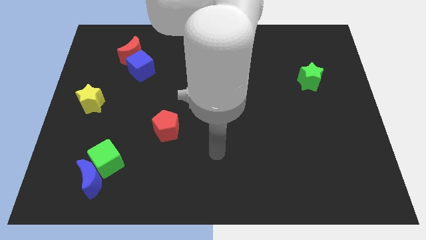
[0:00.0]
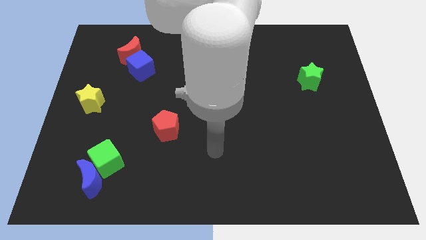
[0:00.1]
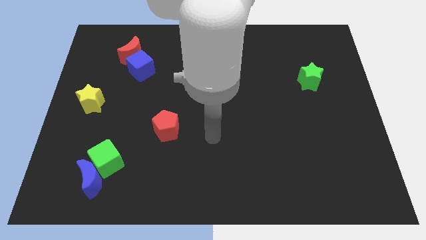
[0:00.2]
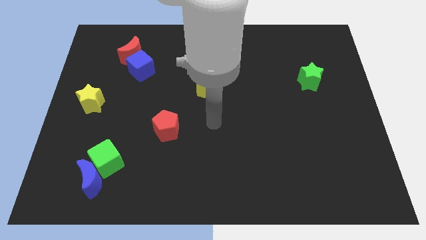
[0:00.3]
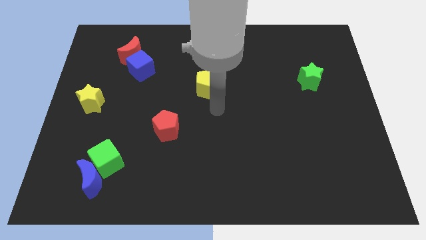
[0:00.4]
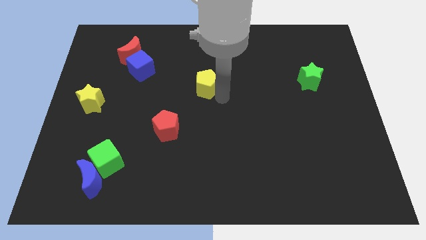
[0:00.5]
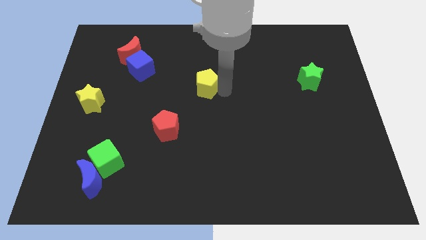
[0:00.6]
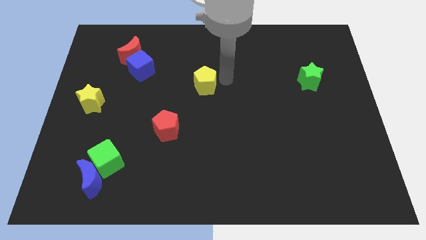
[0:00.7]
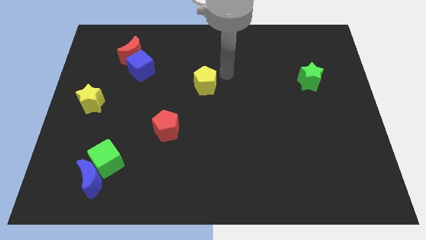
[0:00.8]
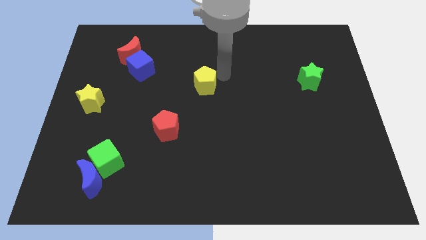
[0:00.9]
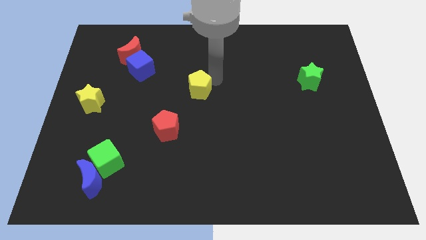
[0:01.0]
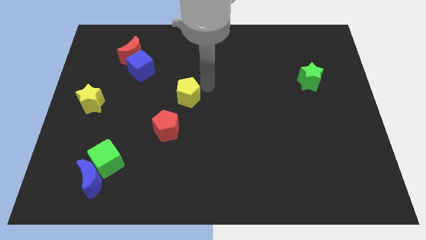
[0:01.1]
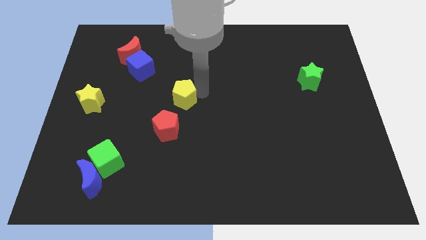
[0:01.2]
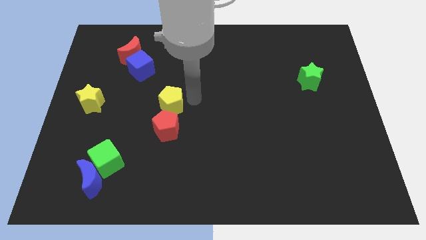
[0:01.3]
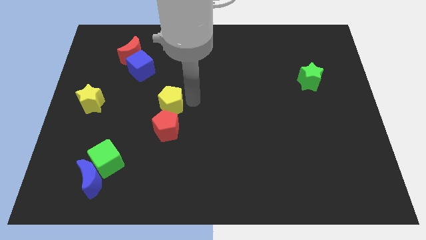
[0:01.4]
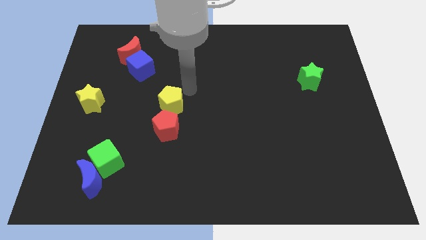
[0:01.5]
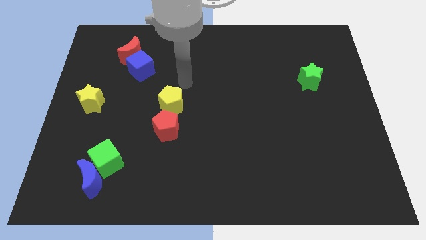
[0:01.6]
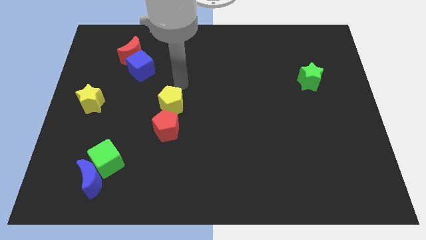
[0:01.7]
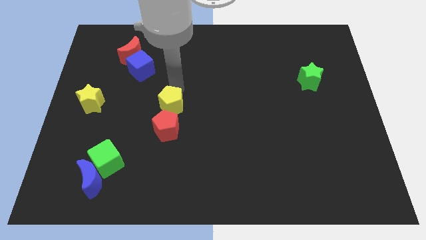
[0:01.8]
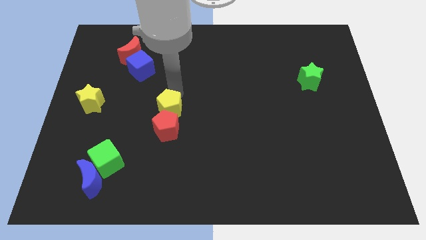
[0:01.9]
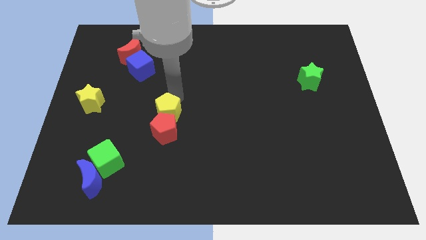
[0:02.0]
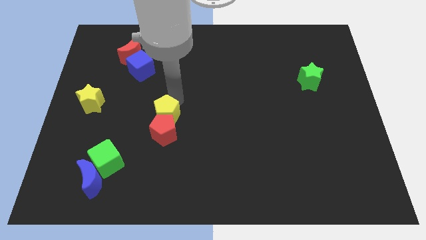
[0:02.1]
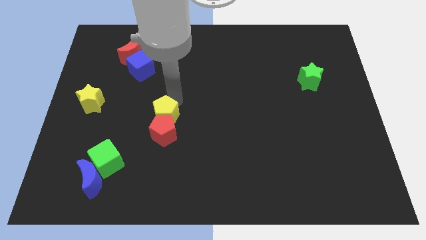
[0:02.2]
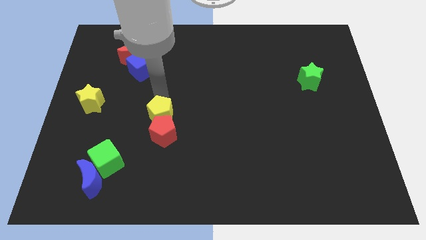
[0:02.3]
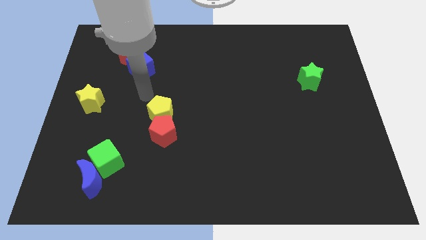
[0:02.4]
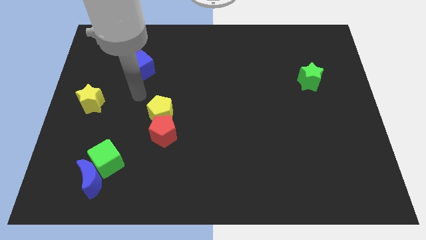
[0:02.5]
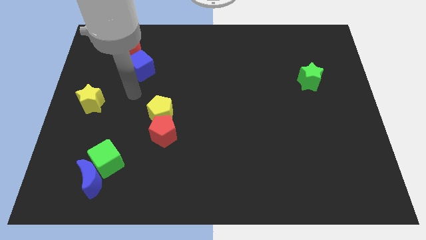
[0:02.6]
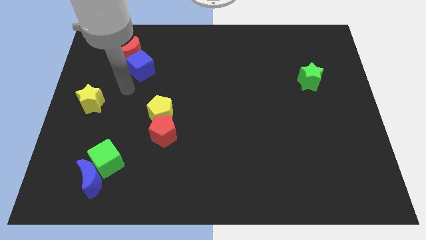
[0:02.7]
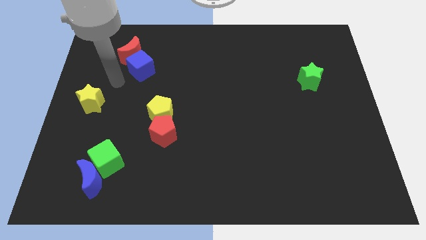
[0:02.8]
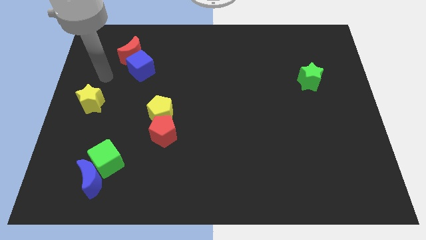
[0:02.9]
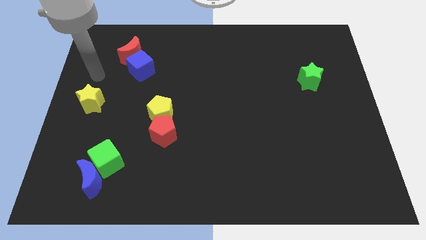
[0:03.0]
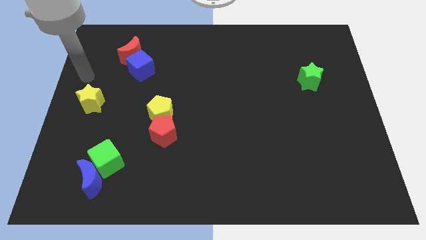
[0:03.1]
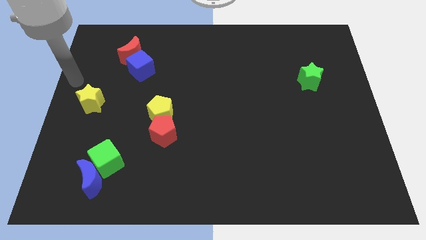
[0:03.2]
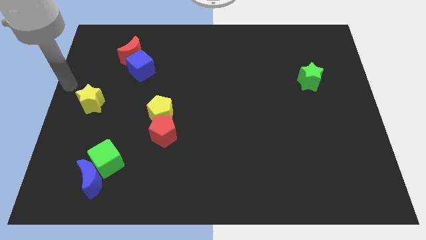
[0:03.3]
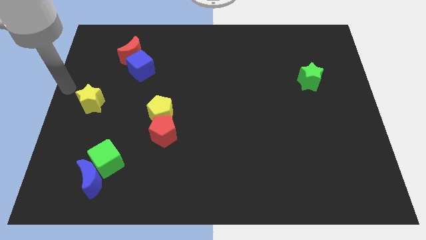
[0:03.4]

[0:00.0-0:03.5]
push the yellow pentagon over the red object

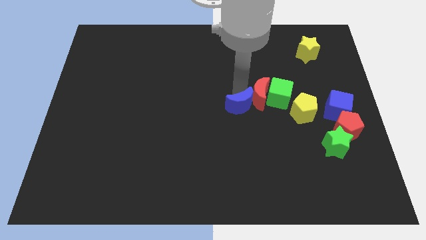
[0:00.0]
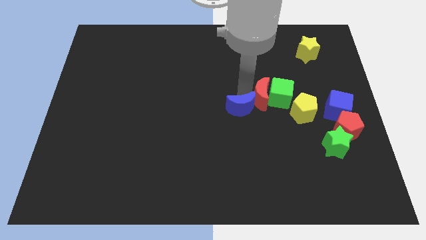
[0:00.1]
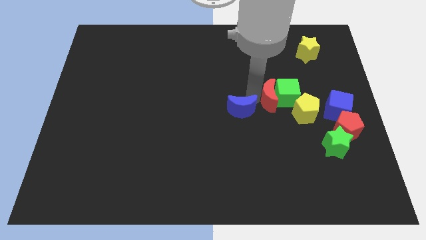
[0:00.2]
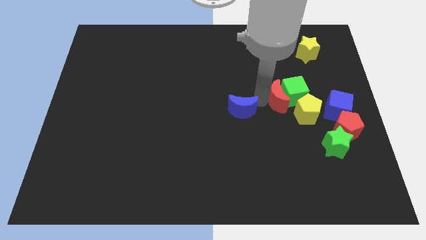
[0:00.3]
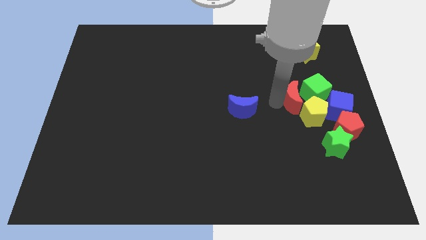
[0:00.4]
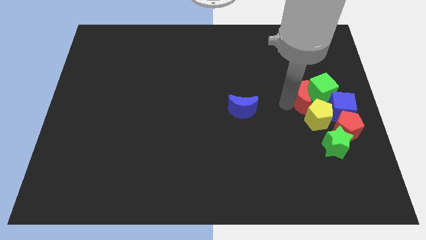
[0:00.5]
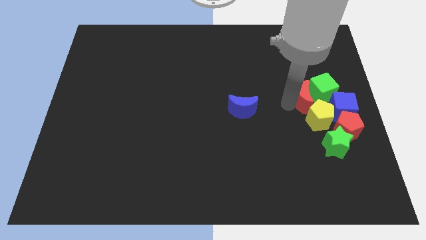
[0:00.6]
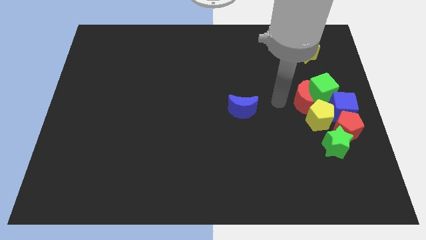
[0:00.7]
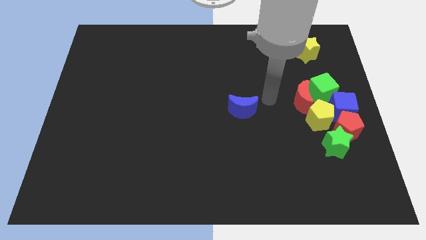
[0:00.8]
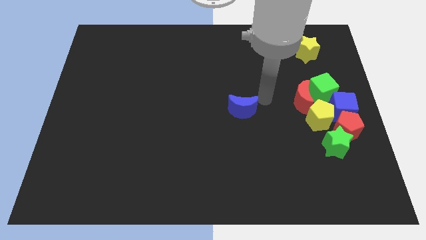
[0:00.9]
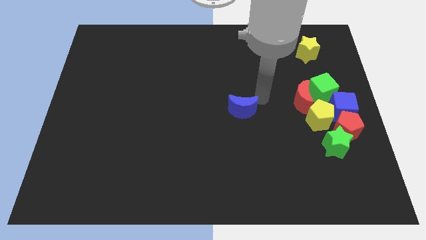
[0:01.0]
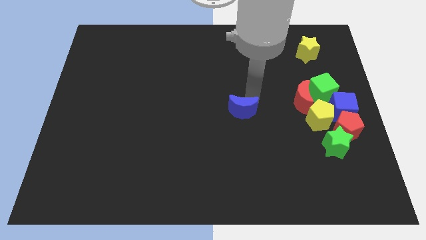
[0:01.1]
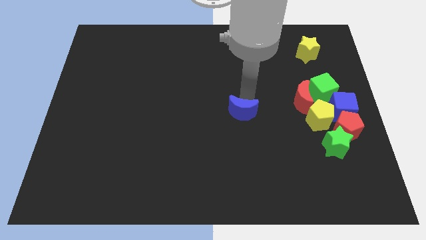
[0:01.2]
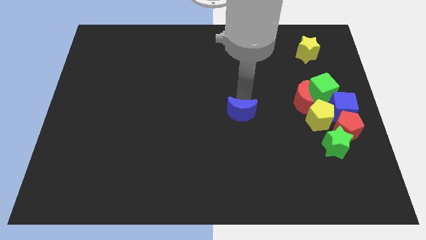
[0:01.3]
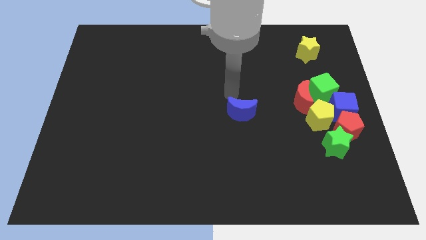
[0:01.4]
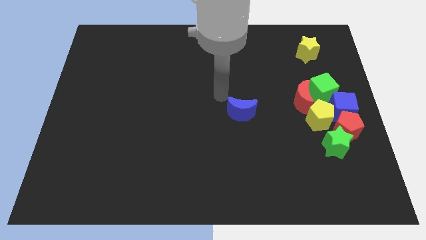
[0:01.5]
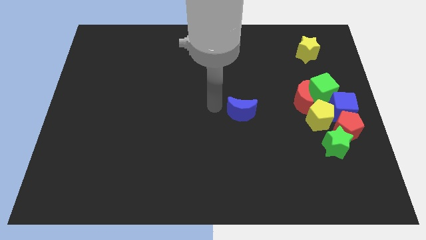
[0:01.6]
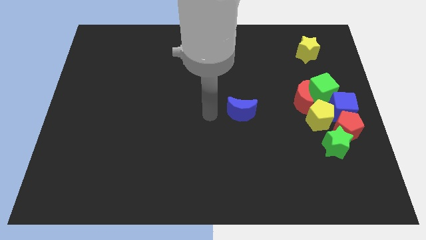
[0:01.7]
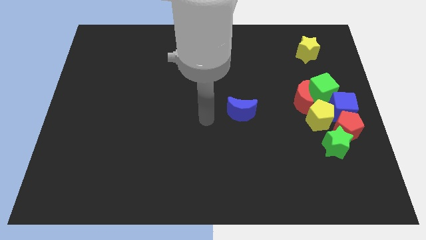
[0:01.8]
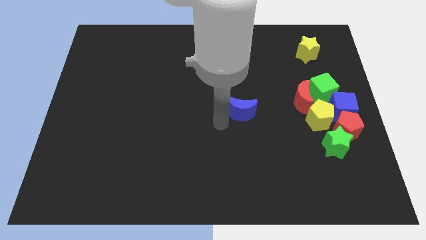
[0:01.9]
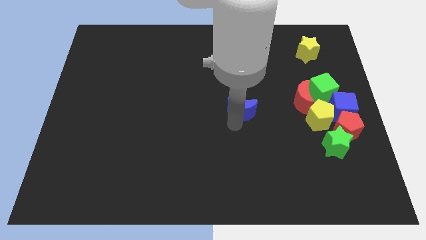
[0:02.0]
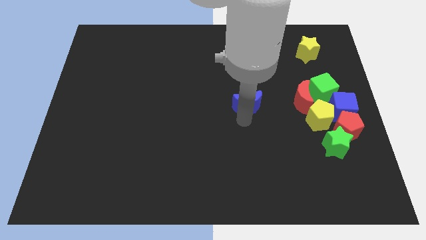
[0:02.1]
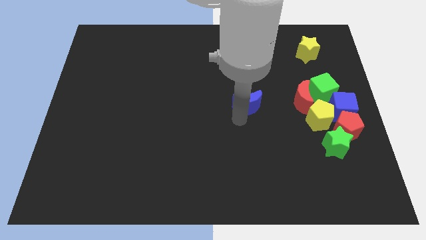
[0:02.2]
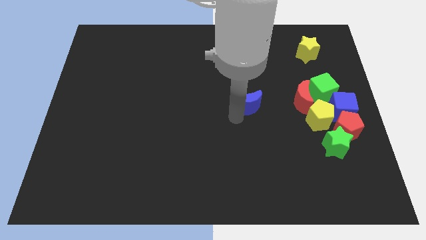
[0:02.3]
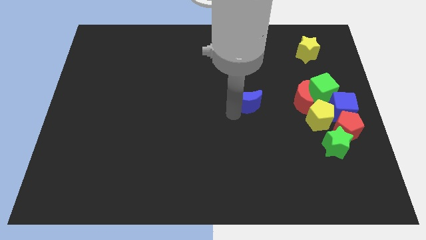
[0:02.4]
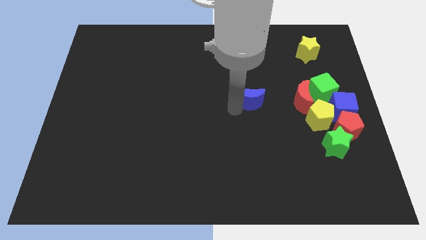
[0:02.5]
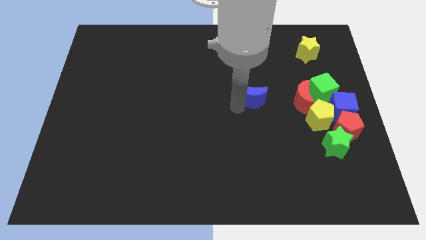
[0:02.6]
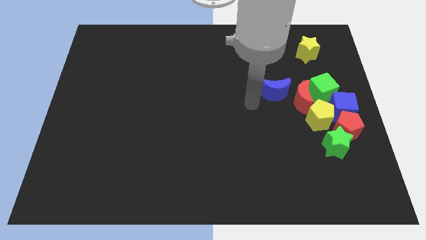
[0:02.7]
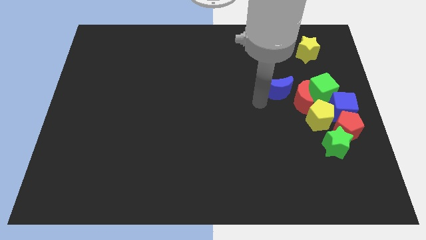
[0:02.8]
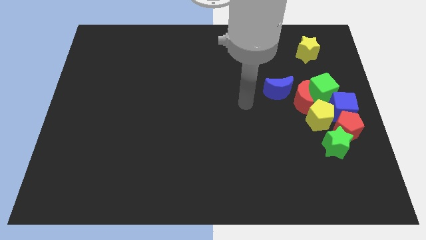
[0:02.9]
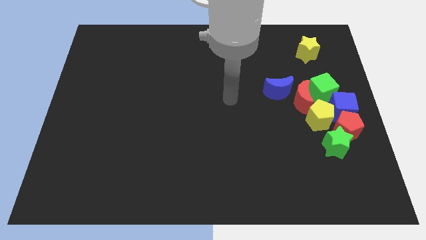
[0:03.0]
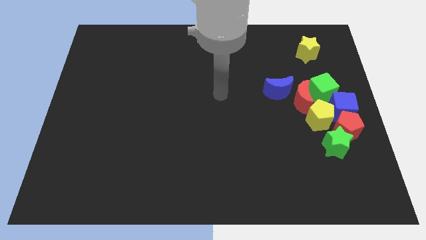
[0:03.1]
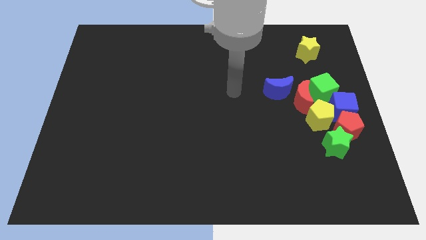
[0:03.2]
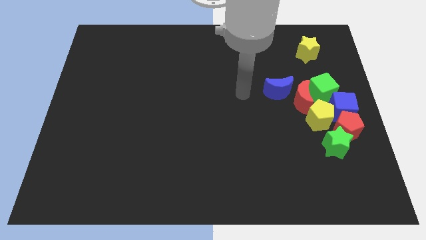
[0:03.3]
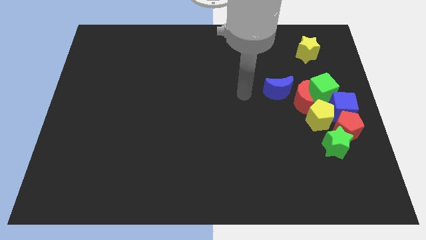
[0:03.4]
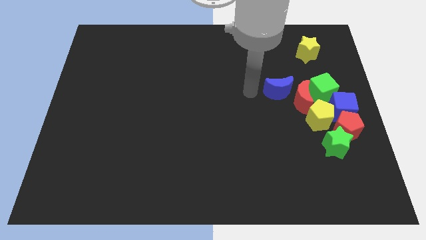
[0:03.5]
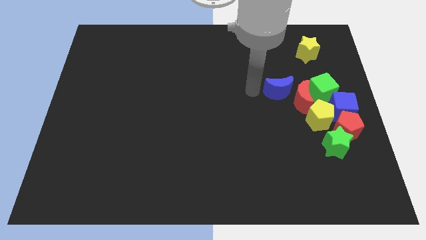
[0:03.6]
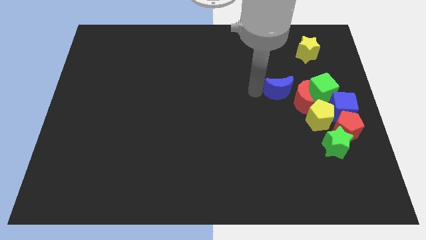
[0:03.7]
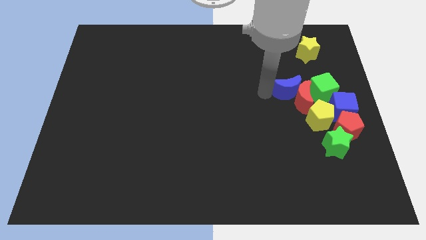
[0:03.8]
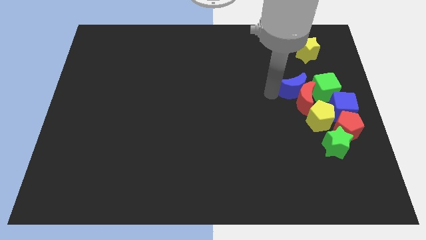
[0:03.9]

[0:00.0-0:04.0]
push the group of blocks towards the right side of the board

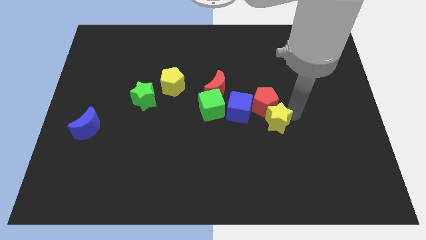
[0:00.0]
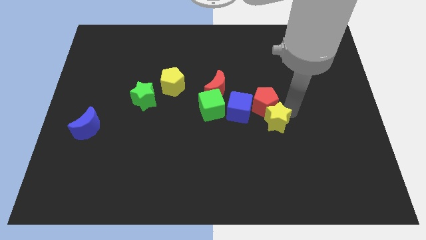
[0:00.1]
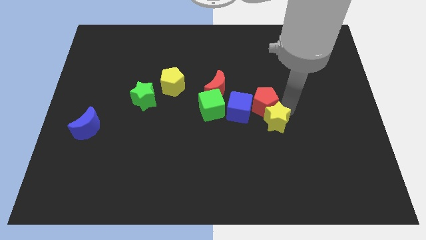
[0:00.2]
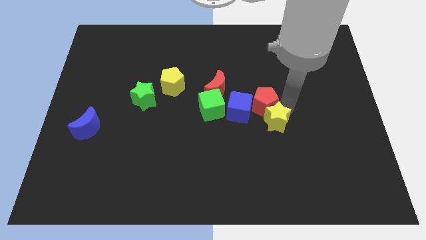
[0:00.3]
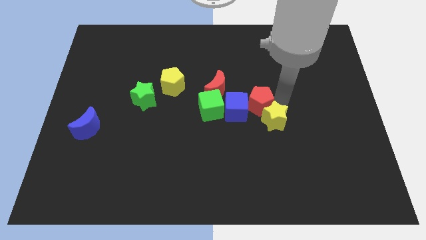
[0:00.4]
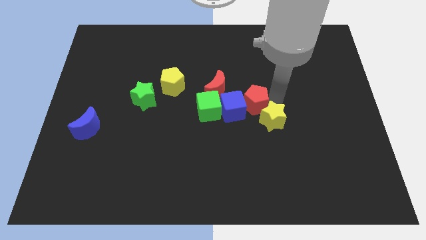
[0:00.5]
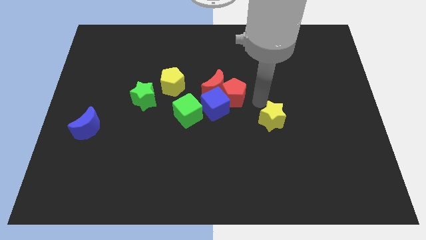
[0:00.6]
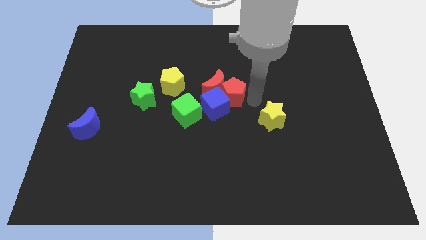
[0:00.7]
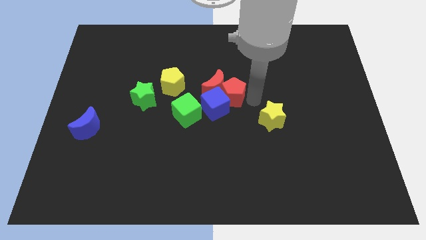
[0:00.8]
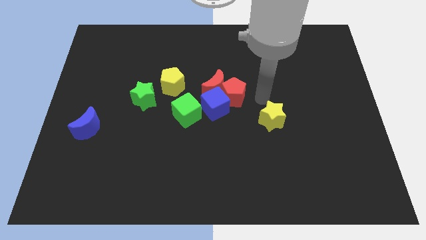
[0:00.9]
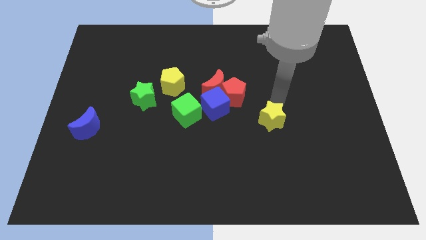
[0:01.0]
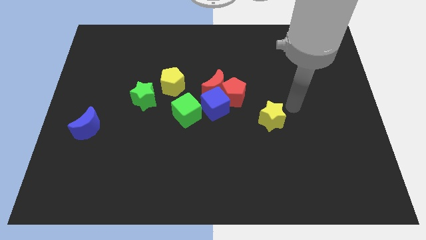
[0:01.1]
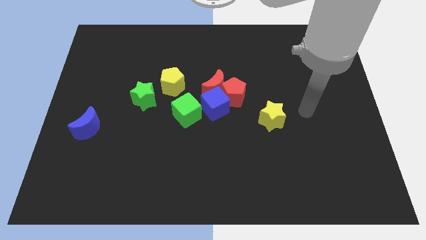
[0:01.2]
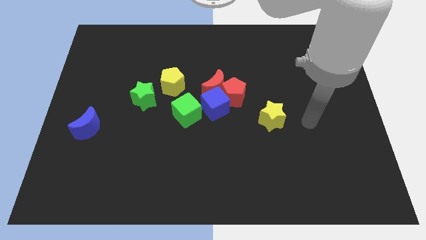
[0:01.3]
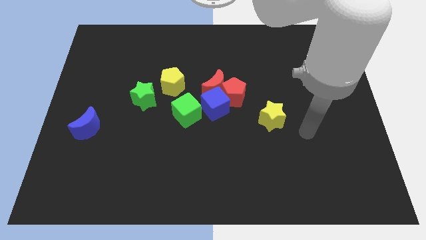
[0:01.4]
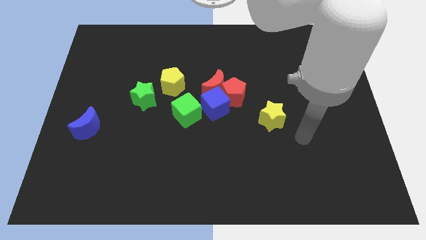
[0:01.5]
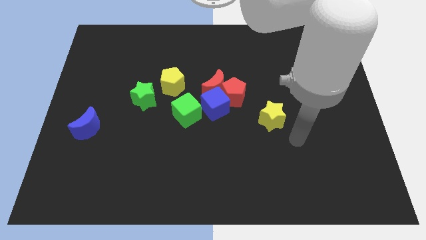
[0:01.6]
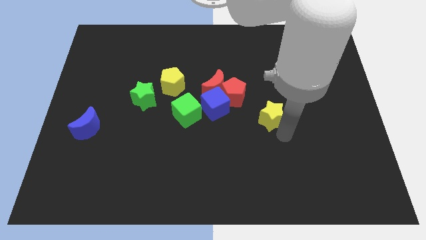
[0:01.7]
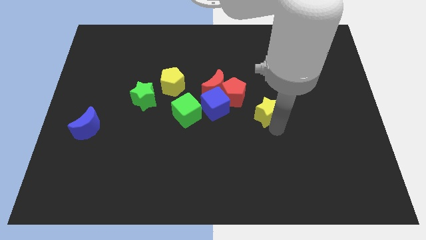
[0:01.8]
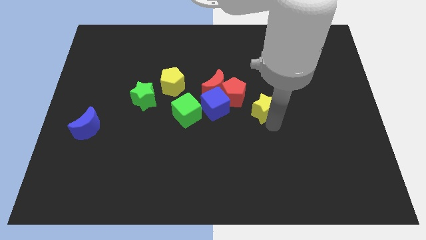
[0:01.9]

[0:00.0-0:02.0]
move red crescentred pentagonyellow star towards left
